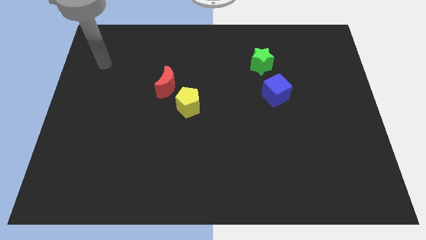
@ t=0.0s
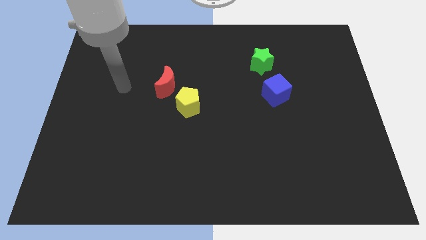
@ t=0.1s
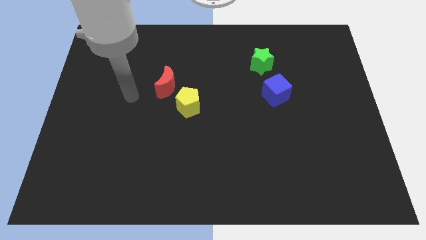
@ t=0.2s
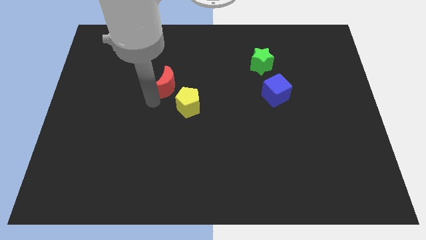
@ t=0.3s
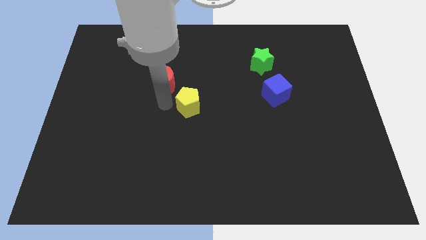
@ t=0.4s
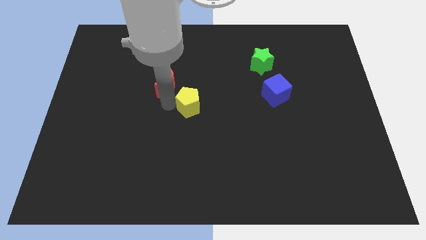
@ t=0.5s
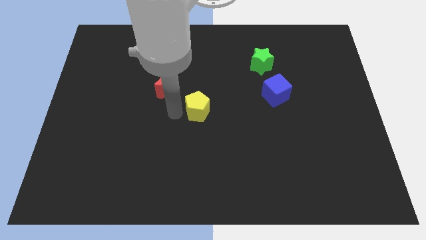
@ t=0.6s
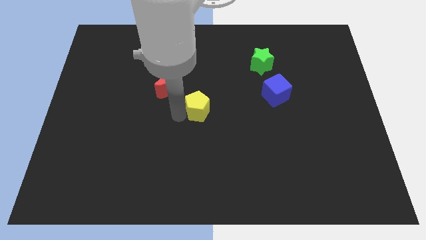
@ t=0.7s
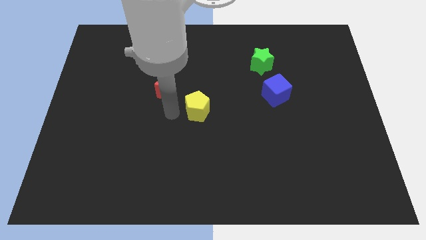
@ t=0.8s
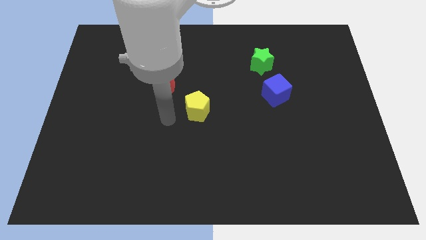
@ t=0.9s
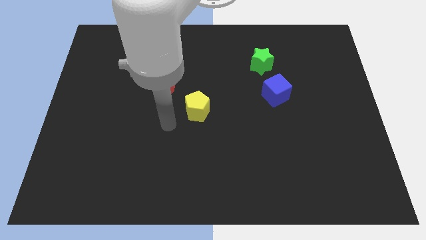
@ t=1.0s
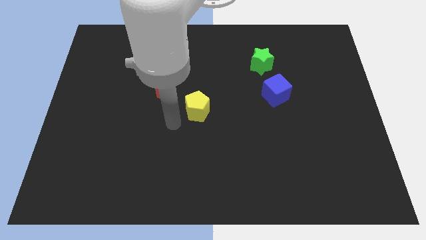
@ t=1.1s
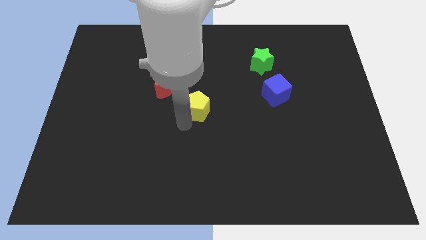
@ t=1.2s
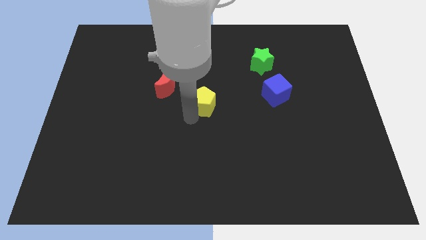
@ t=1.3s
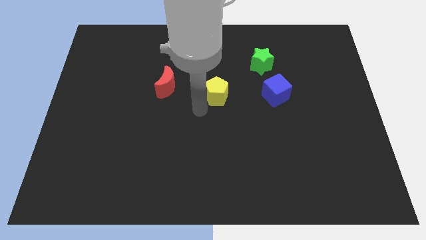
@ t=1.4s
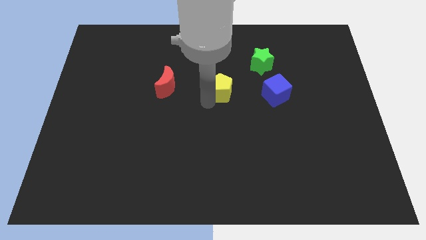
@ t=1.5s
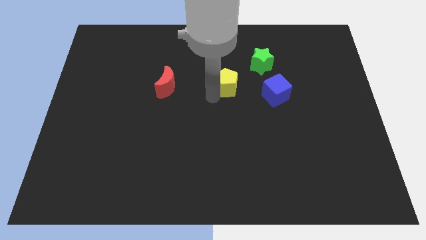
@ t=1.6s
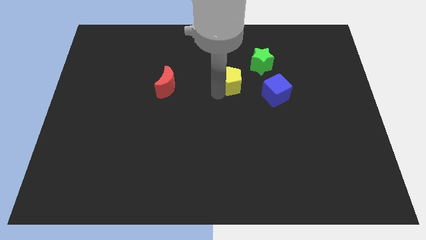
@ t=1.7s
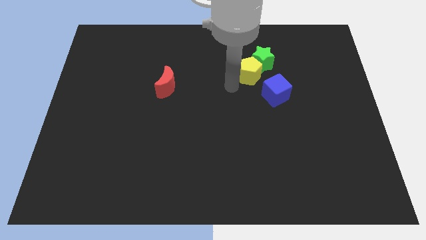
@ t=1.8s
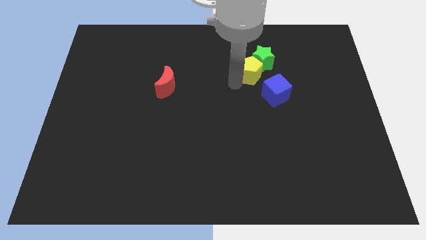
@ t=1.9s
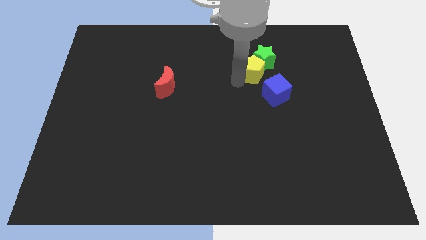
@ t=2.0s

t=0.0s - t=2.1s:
move the yellow pentagon close to the star

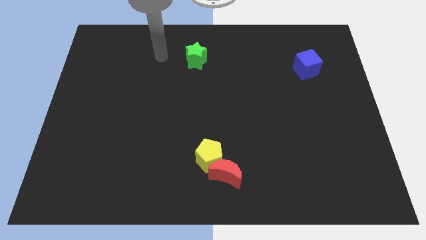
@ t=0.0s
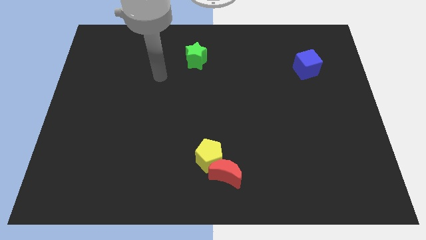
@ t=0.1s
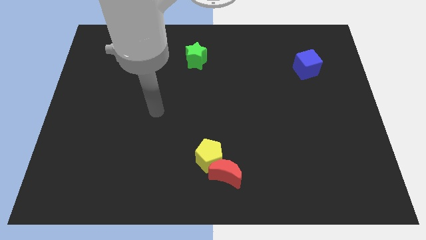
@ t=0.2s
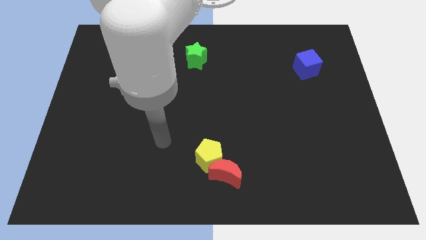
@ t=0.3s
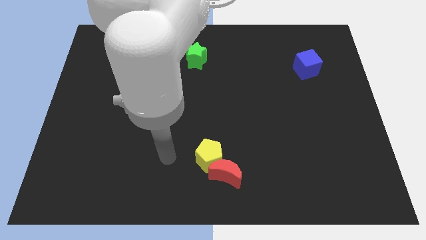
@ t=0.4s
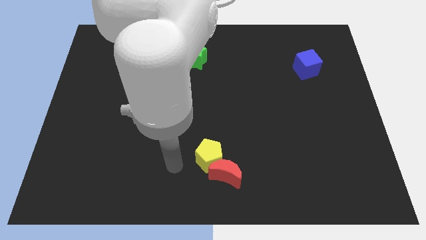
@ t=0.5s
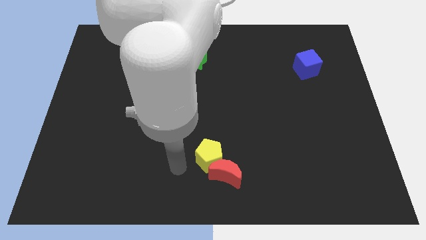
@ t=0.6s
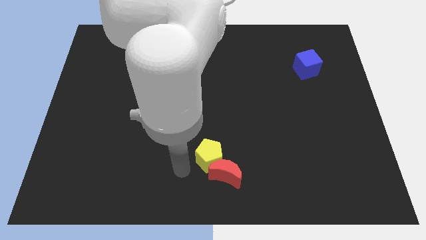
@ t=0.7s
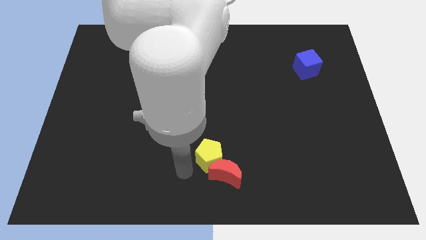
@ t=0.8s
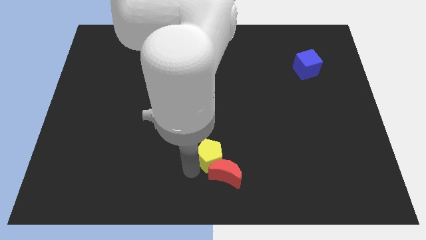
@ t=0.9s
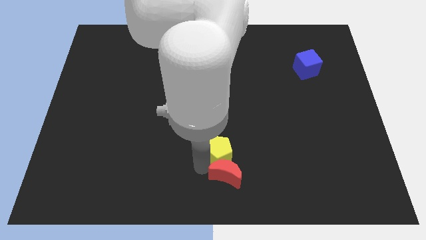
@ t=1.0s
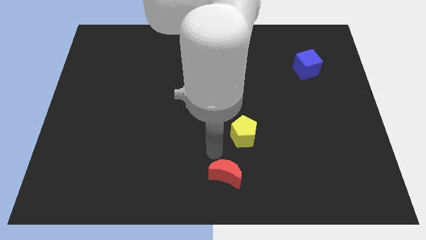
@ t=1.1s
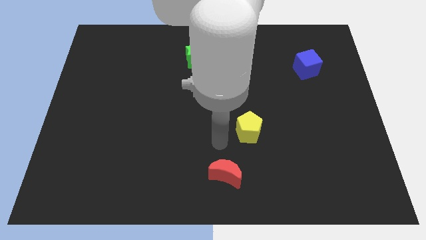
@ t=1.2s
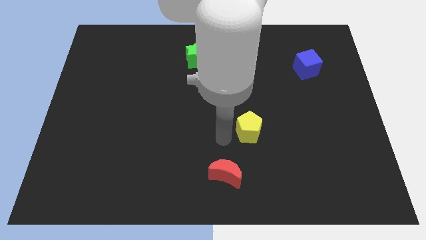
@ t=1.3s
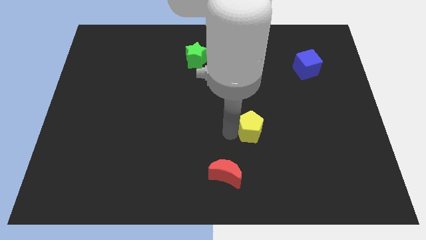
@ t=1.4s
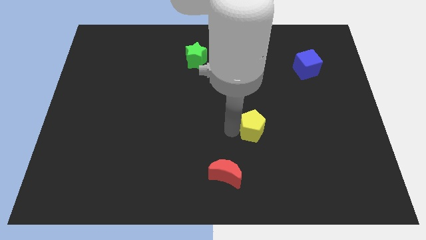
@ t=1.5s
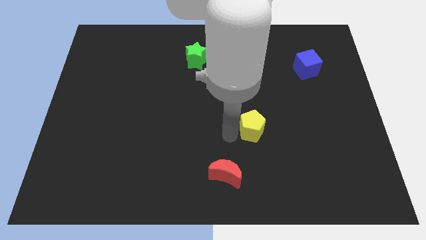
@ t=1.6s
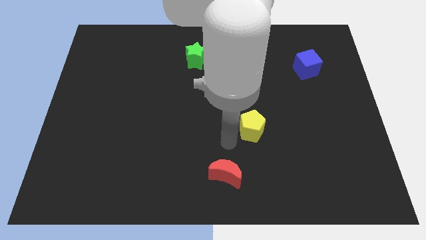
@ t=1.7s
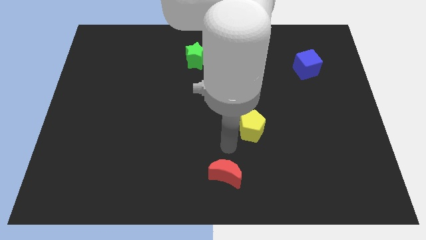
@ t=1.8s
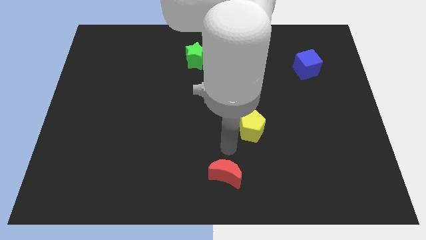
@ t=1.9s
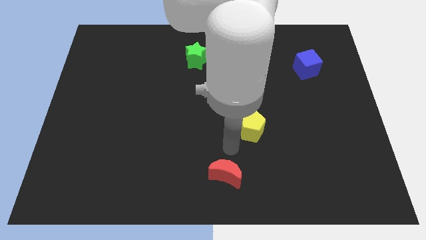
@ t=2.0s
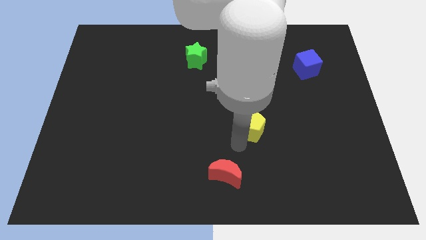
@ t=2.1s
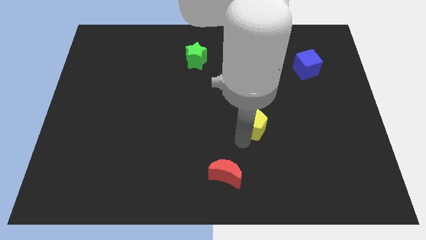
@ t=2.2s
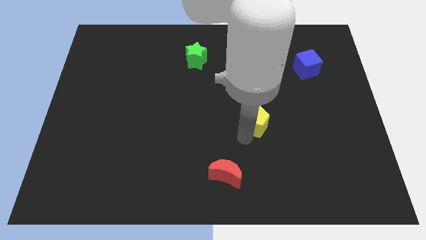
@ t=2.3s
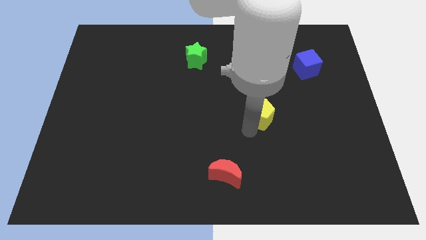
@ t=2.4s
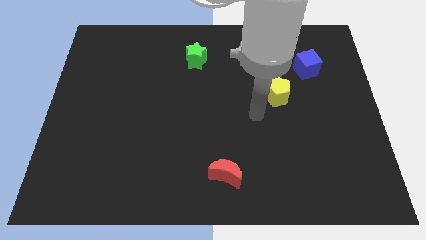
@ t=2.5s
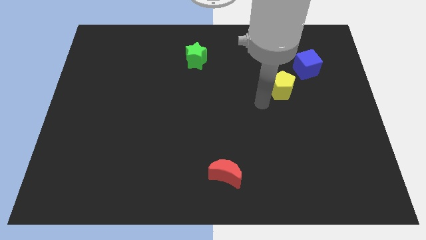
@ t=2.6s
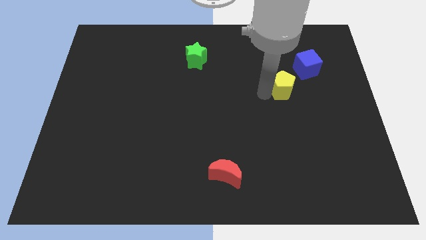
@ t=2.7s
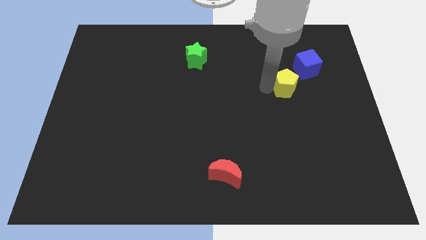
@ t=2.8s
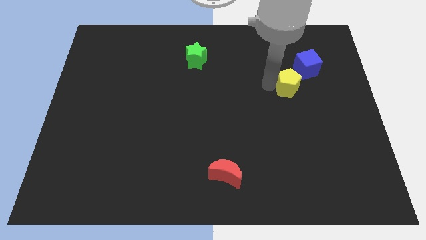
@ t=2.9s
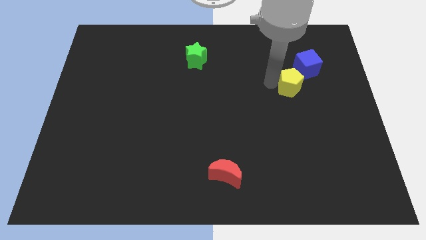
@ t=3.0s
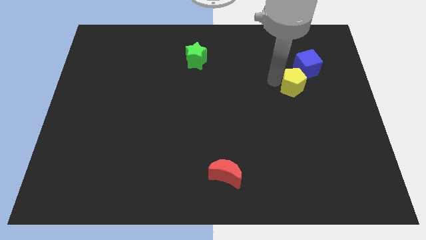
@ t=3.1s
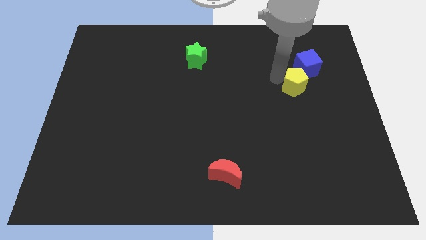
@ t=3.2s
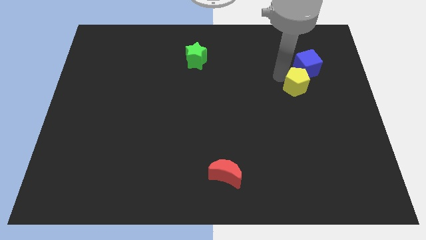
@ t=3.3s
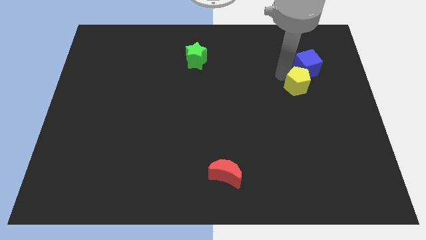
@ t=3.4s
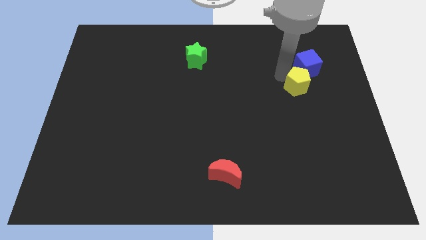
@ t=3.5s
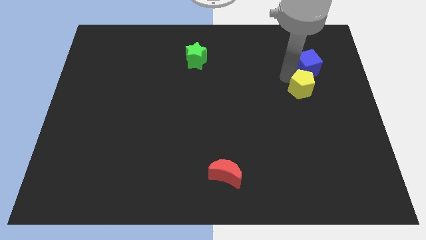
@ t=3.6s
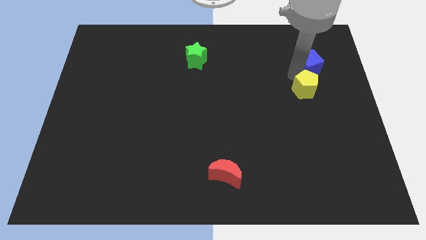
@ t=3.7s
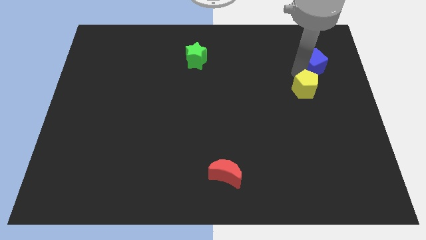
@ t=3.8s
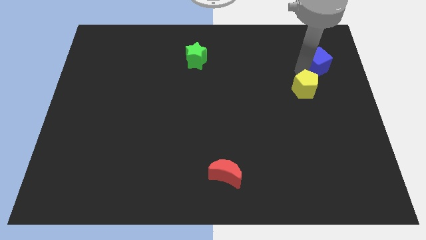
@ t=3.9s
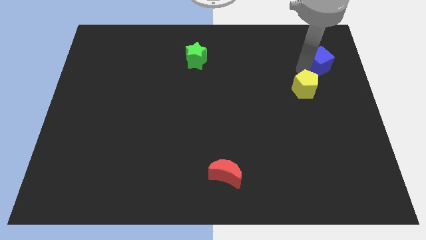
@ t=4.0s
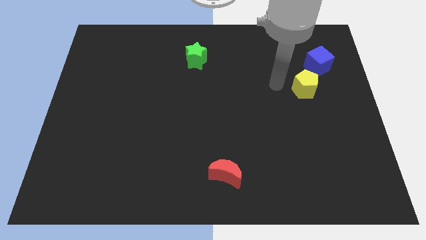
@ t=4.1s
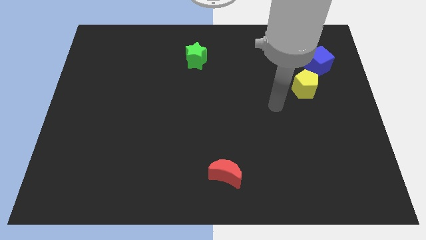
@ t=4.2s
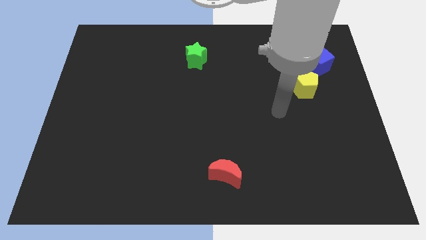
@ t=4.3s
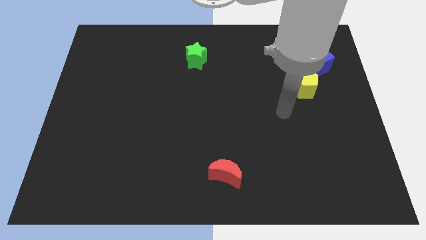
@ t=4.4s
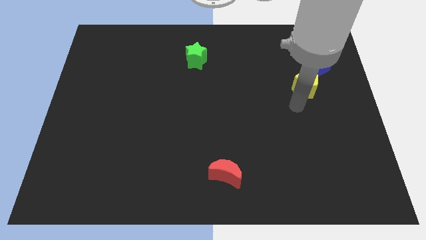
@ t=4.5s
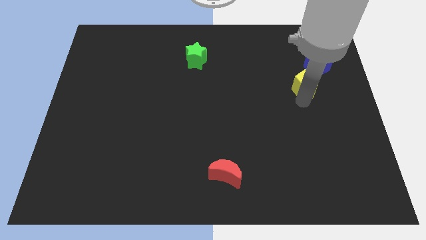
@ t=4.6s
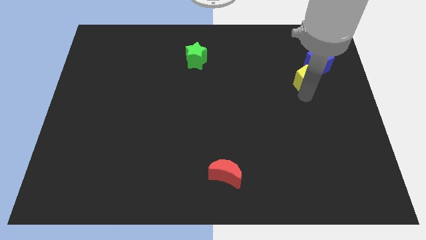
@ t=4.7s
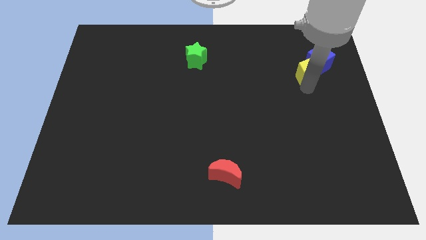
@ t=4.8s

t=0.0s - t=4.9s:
push the pentagon next to the cube

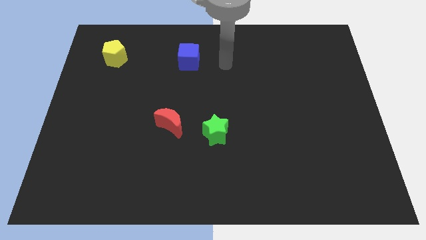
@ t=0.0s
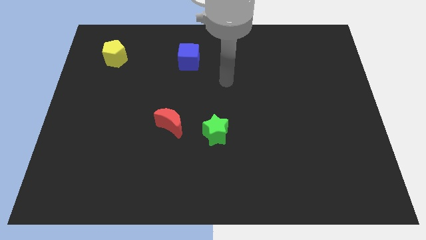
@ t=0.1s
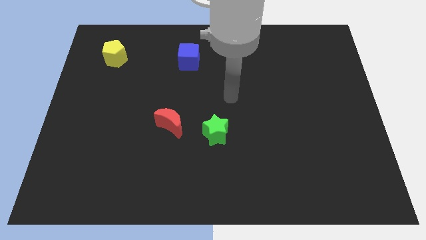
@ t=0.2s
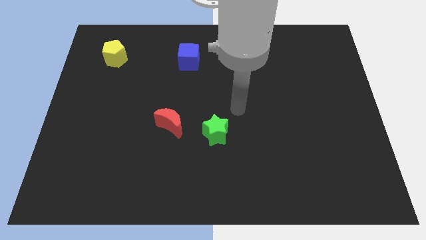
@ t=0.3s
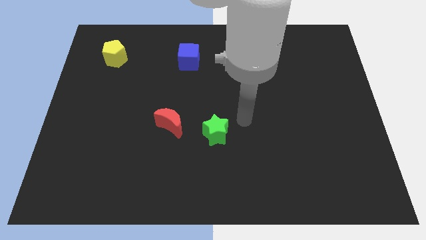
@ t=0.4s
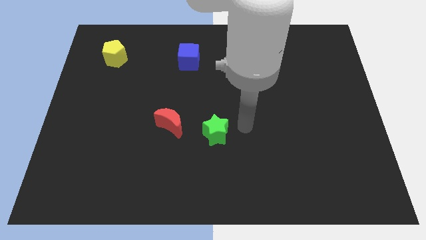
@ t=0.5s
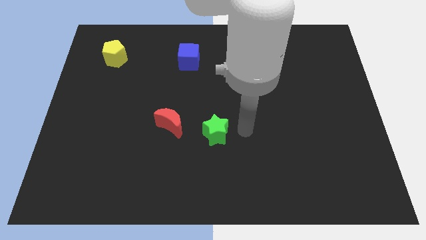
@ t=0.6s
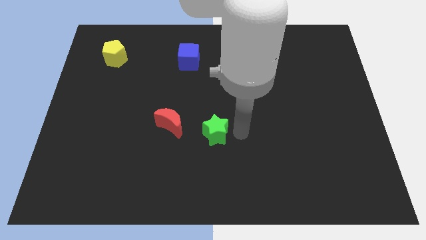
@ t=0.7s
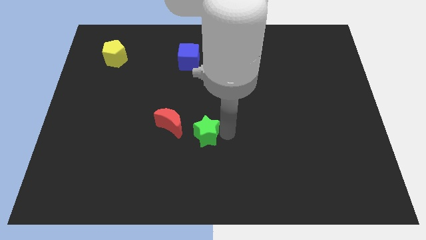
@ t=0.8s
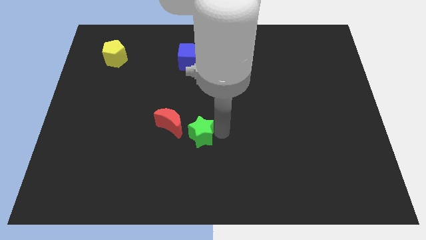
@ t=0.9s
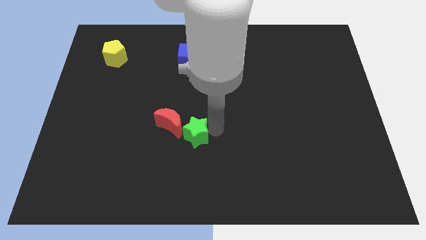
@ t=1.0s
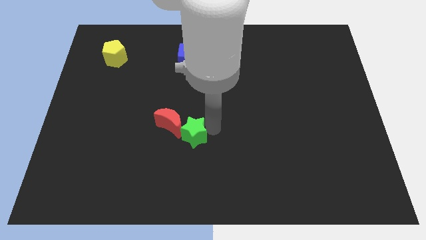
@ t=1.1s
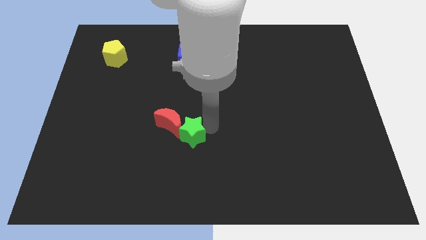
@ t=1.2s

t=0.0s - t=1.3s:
put the green star towards the red moon
